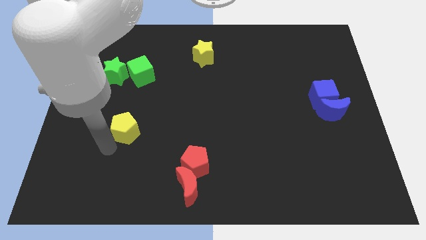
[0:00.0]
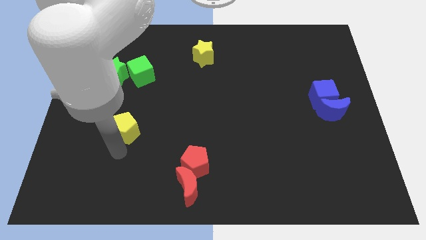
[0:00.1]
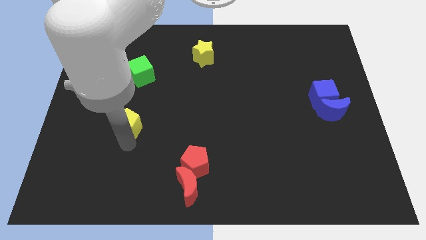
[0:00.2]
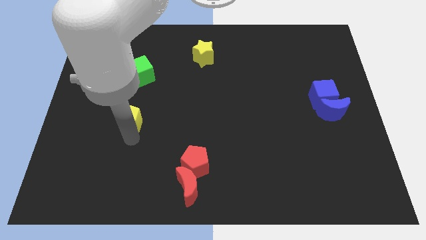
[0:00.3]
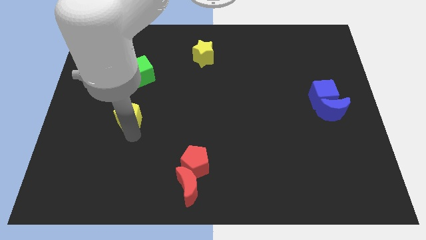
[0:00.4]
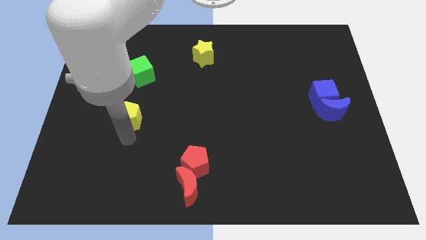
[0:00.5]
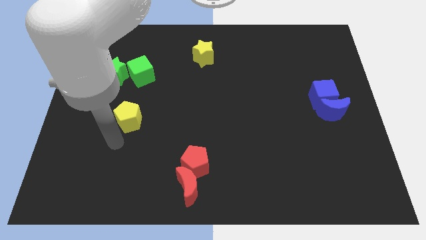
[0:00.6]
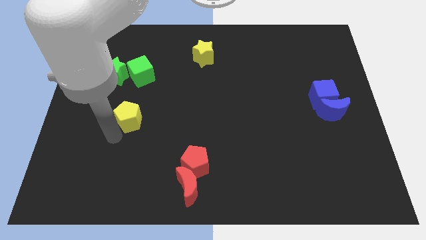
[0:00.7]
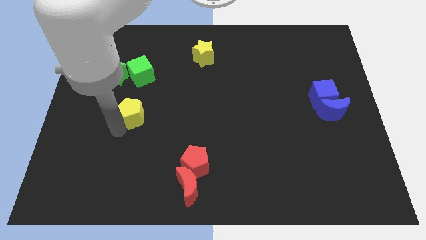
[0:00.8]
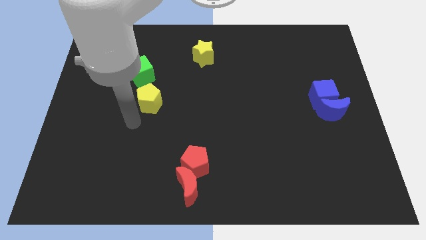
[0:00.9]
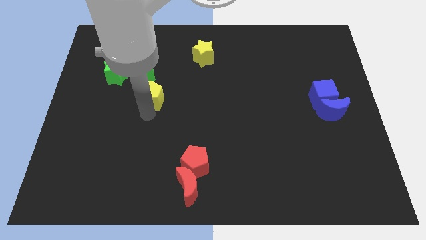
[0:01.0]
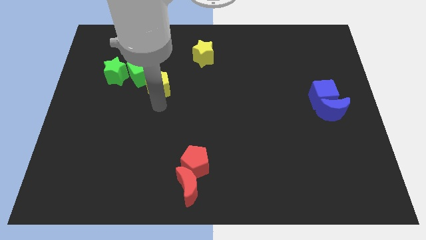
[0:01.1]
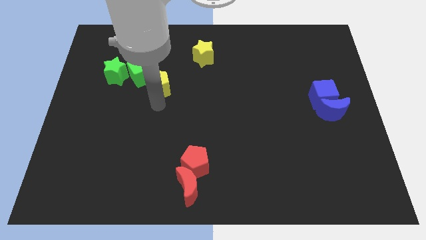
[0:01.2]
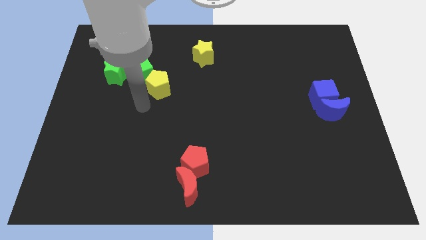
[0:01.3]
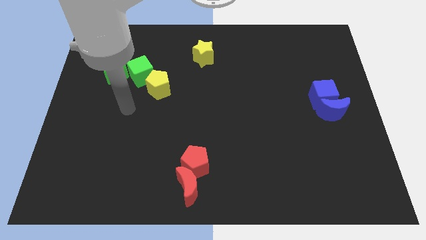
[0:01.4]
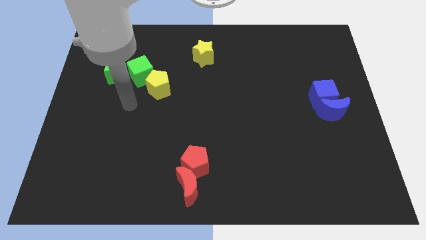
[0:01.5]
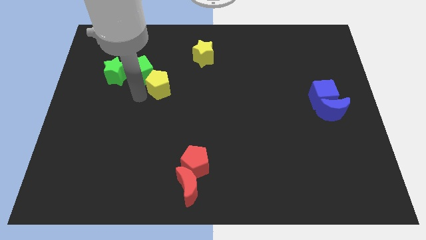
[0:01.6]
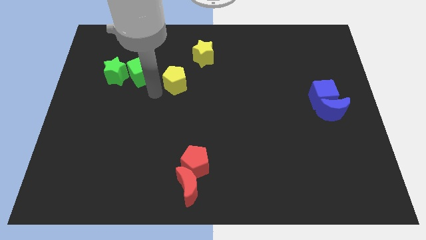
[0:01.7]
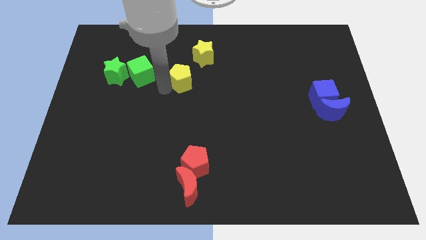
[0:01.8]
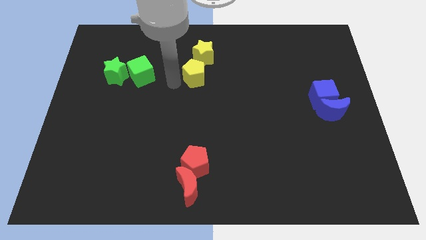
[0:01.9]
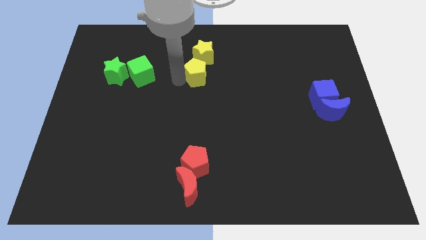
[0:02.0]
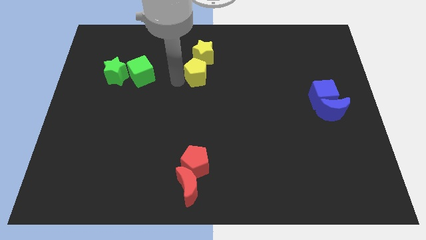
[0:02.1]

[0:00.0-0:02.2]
push the yellow pentagon towards the yellow star

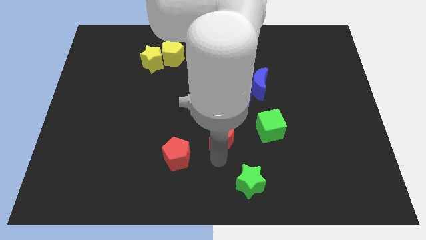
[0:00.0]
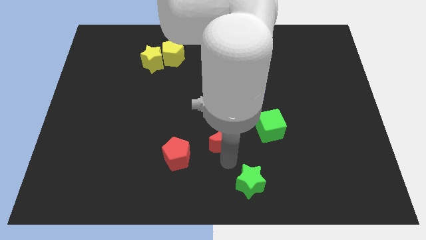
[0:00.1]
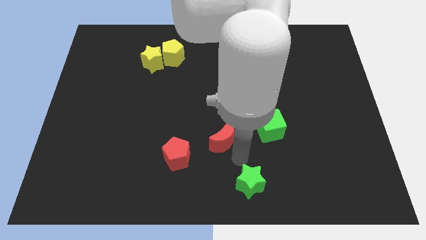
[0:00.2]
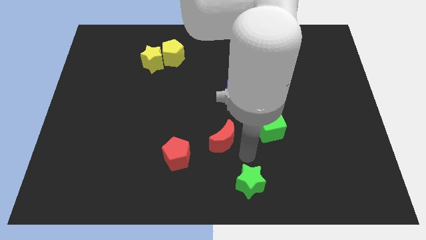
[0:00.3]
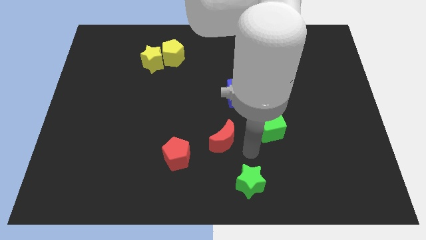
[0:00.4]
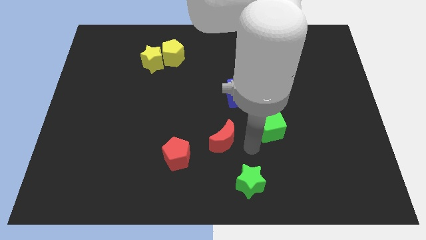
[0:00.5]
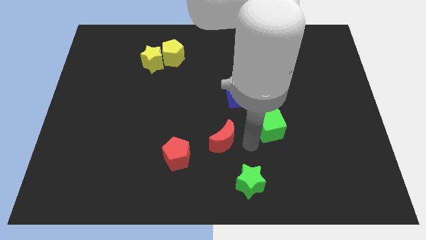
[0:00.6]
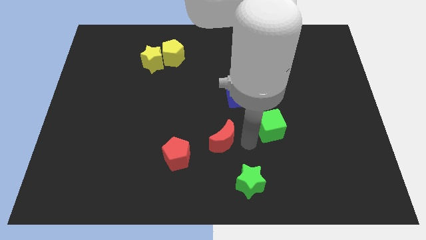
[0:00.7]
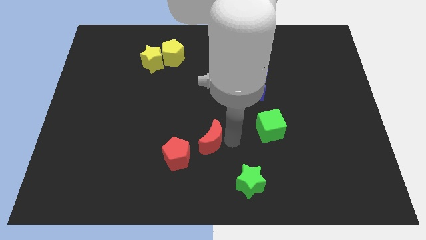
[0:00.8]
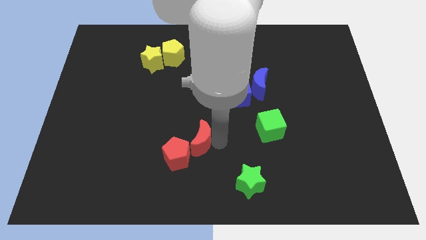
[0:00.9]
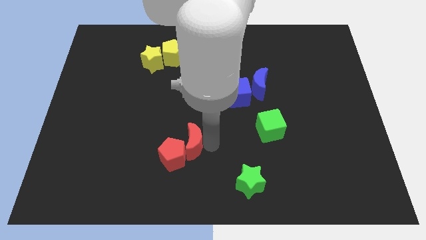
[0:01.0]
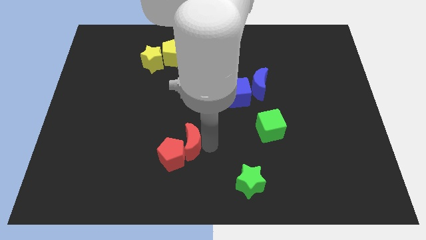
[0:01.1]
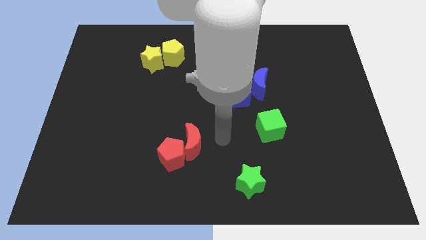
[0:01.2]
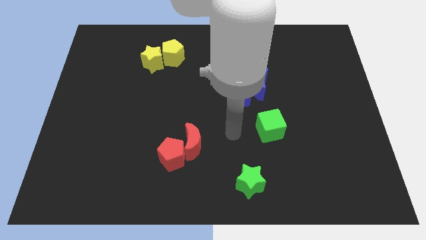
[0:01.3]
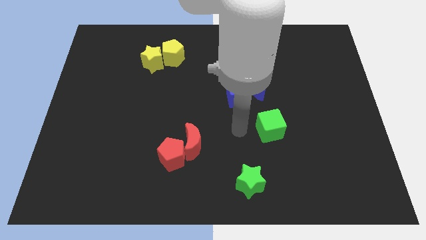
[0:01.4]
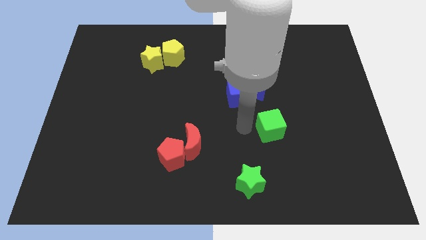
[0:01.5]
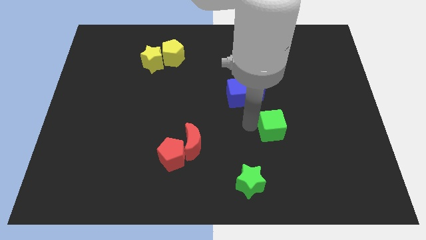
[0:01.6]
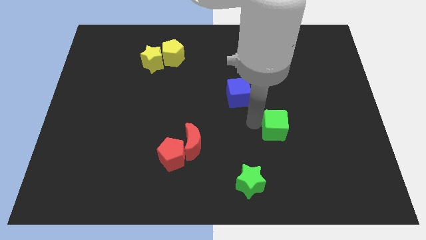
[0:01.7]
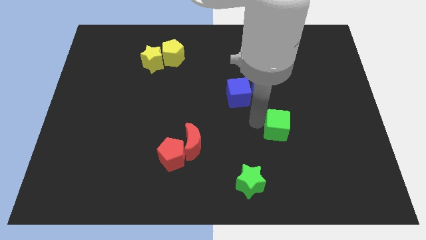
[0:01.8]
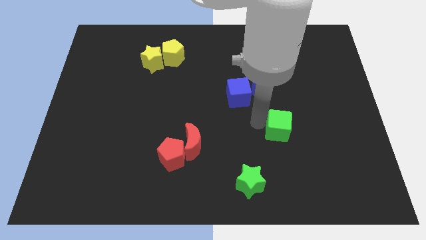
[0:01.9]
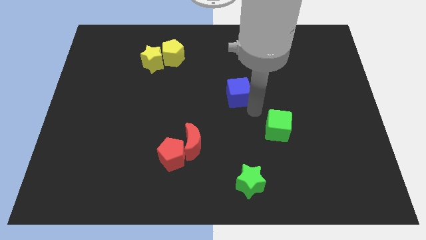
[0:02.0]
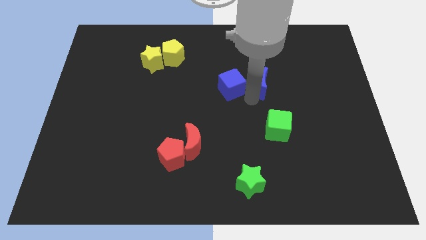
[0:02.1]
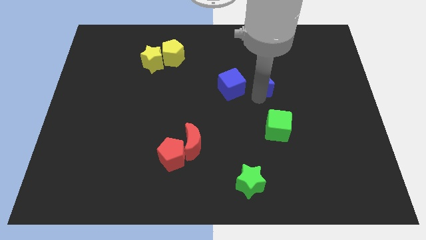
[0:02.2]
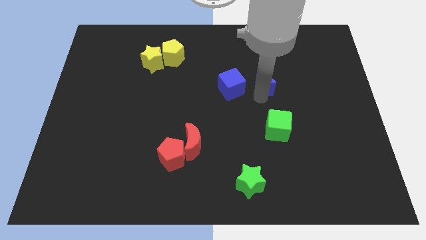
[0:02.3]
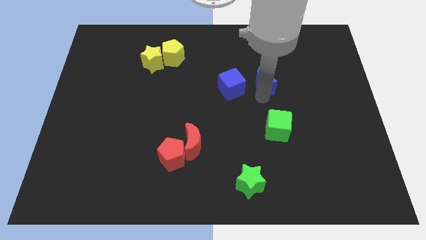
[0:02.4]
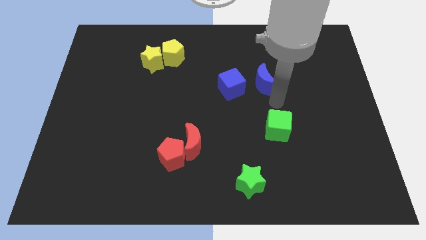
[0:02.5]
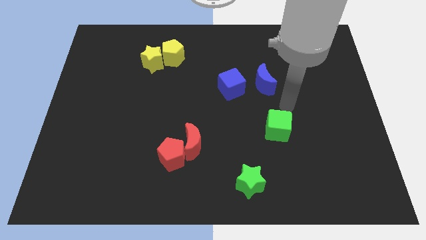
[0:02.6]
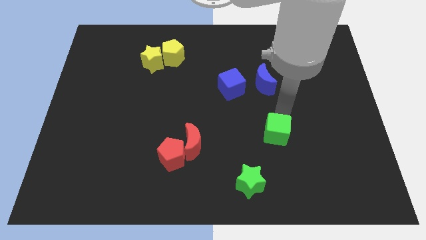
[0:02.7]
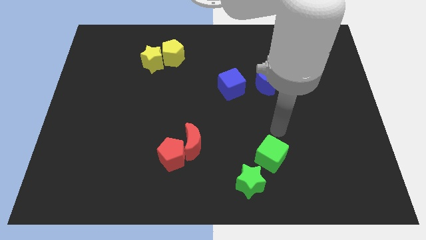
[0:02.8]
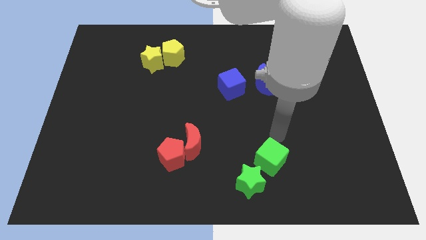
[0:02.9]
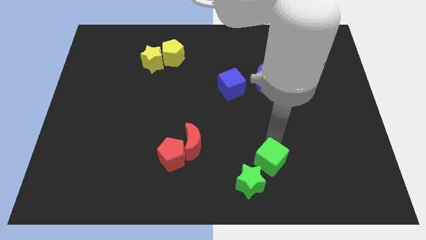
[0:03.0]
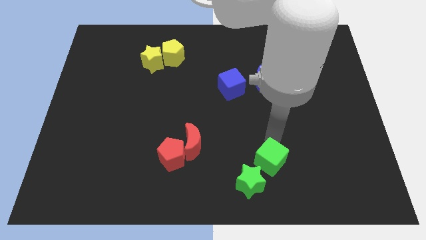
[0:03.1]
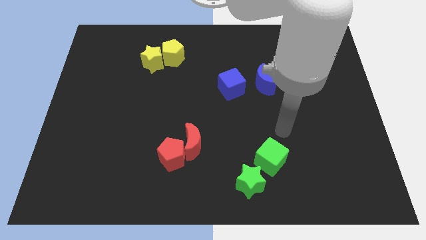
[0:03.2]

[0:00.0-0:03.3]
join the same color blocks at one place

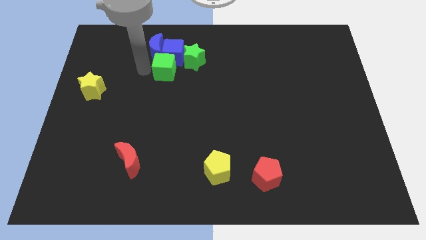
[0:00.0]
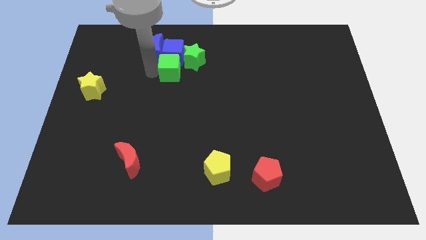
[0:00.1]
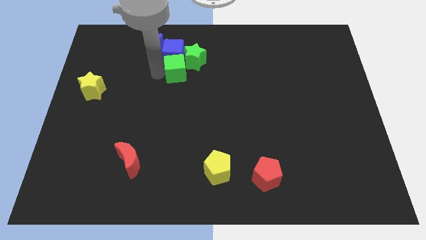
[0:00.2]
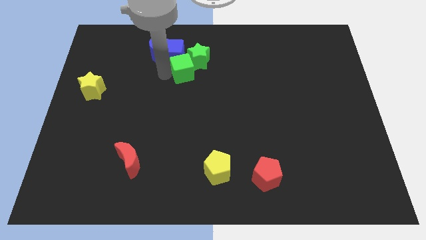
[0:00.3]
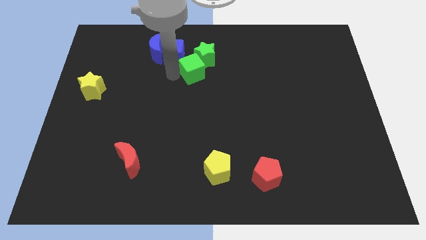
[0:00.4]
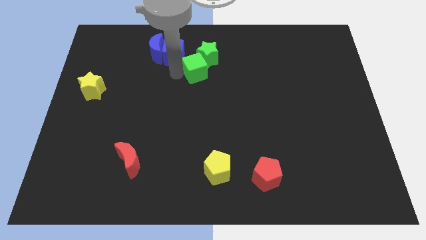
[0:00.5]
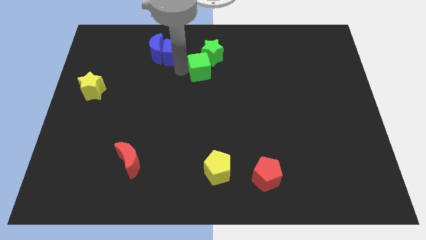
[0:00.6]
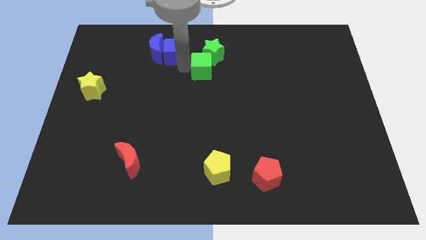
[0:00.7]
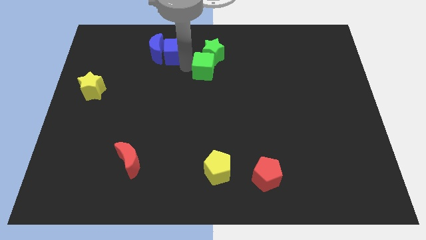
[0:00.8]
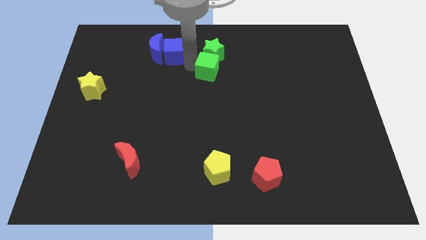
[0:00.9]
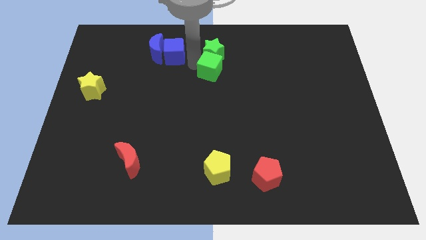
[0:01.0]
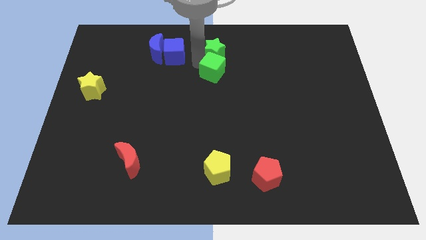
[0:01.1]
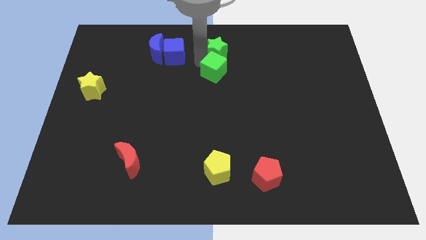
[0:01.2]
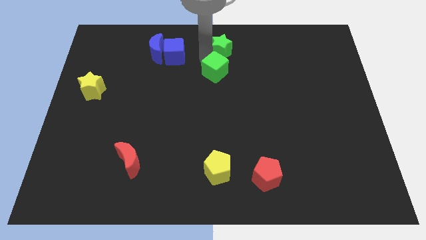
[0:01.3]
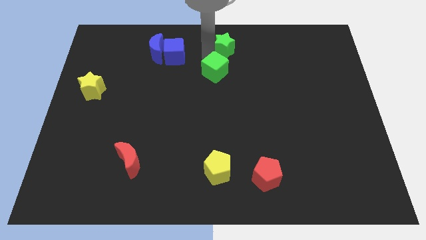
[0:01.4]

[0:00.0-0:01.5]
separate the green star and the green cube

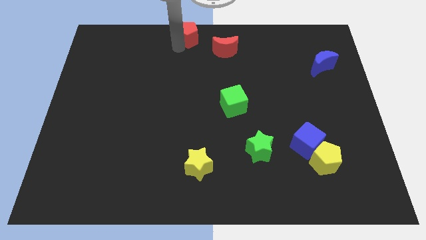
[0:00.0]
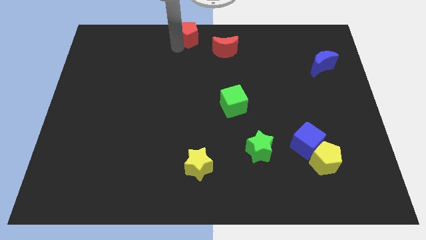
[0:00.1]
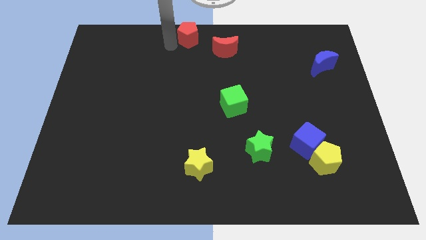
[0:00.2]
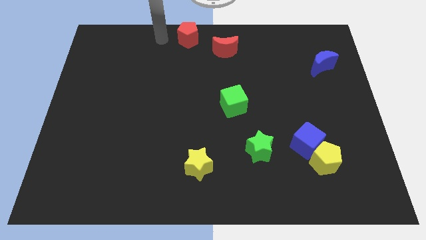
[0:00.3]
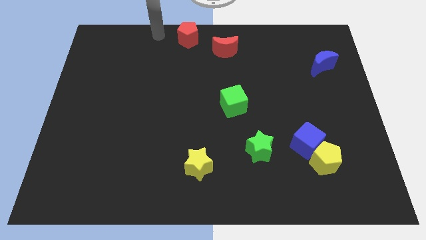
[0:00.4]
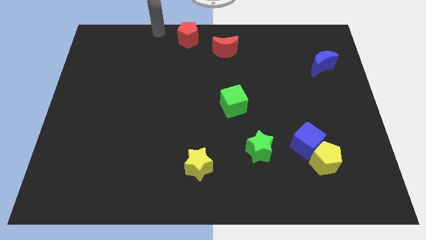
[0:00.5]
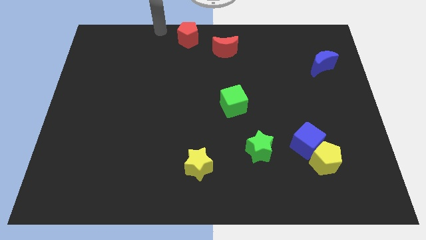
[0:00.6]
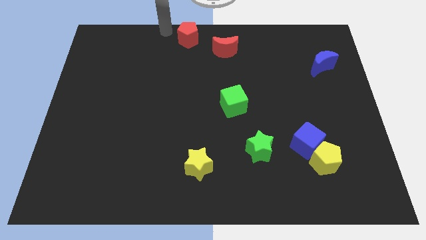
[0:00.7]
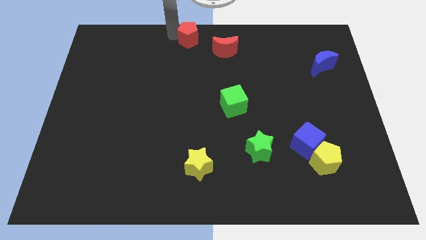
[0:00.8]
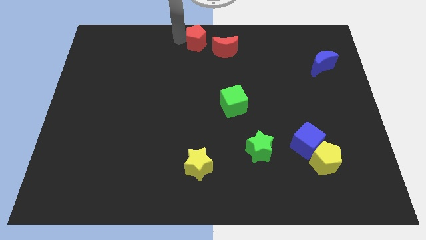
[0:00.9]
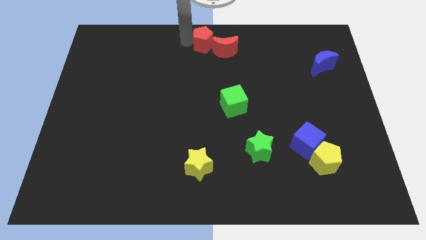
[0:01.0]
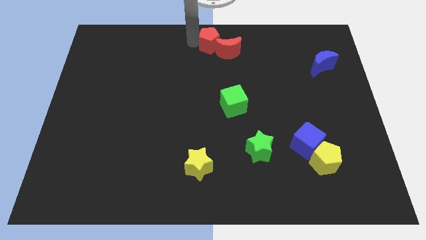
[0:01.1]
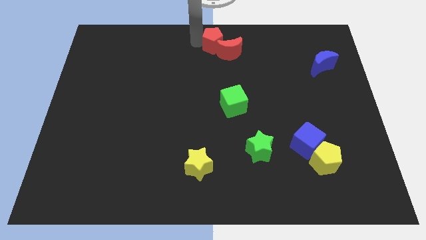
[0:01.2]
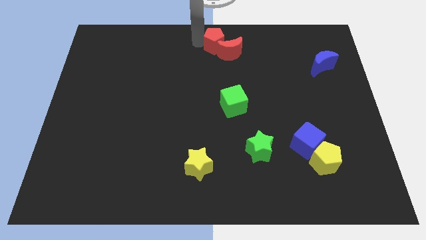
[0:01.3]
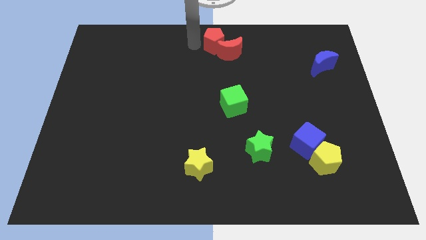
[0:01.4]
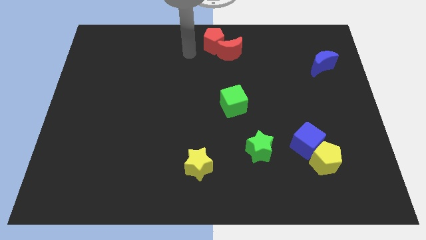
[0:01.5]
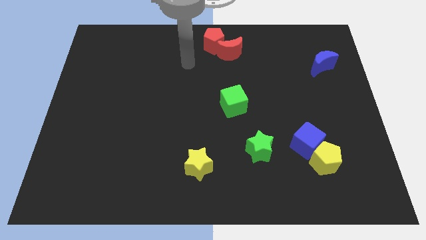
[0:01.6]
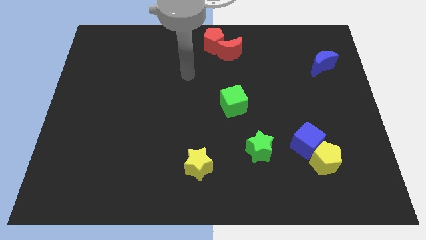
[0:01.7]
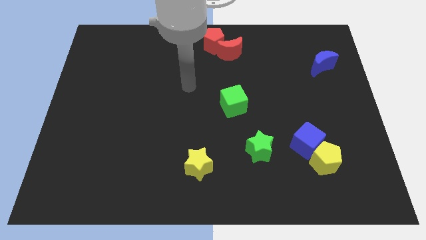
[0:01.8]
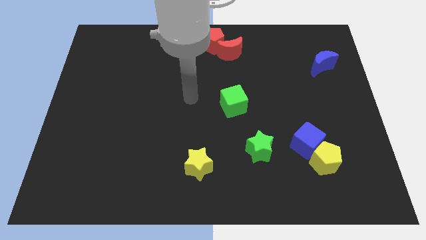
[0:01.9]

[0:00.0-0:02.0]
push the red pentagon into the red crescent to the top center

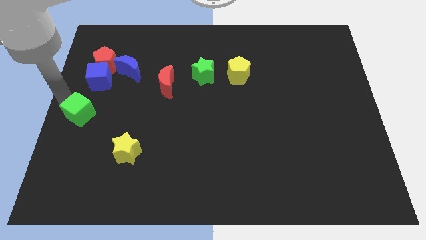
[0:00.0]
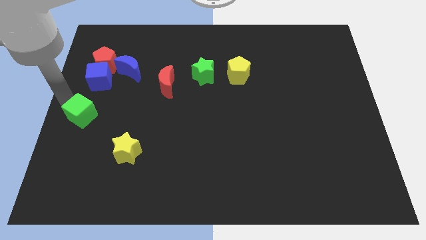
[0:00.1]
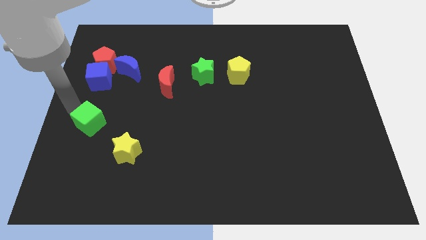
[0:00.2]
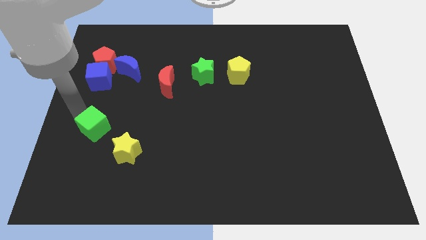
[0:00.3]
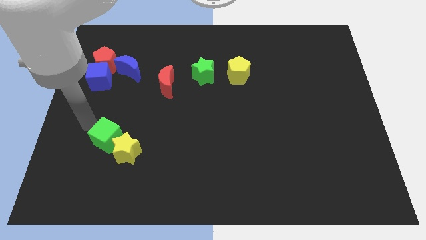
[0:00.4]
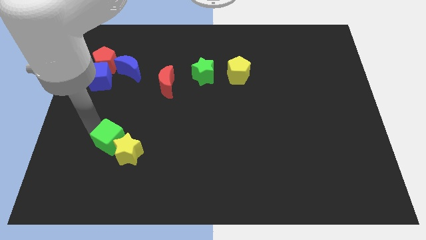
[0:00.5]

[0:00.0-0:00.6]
push green cube near yellow star
